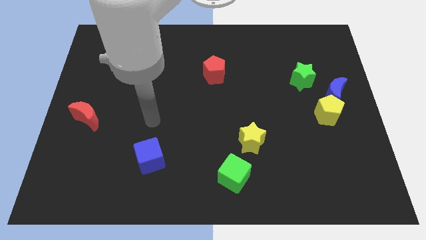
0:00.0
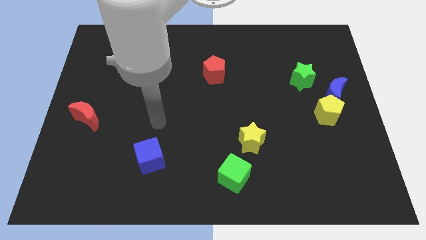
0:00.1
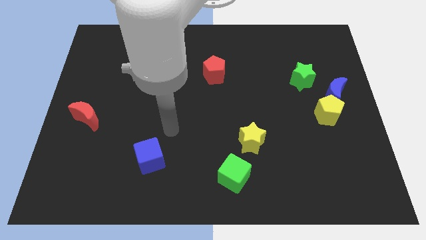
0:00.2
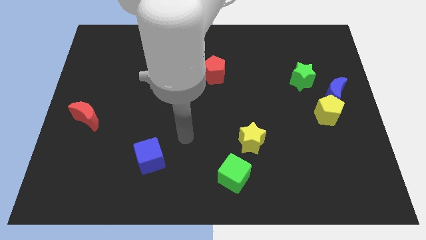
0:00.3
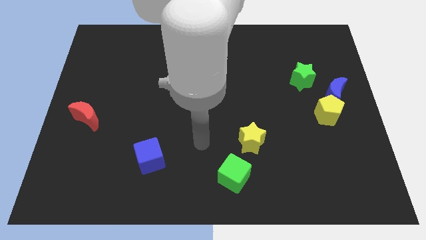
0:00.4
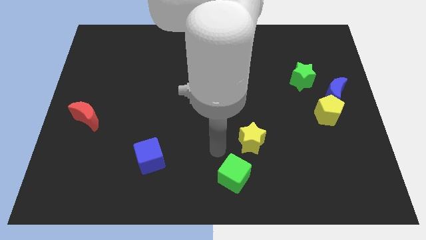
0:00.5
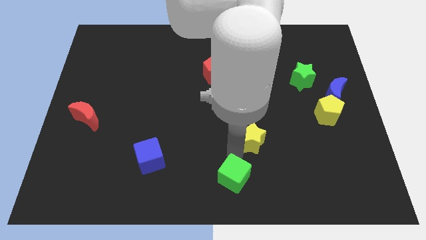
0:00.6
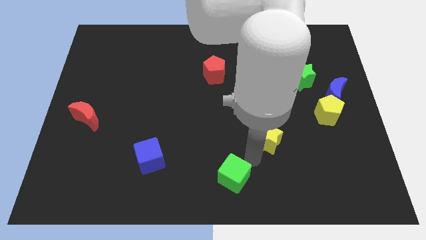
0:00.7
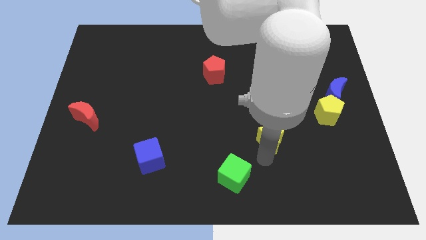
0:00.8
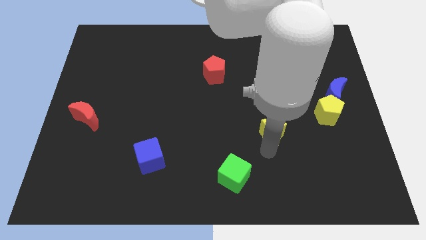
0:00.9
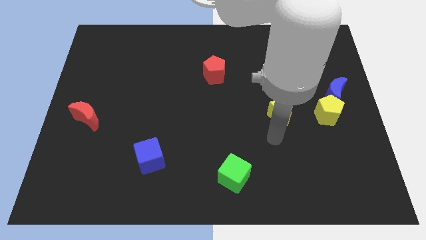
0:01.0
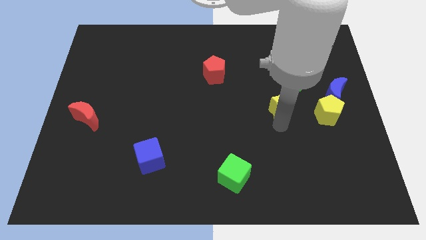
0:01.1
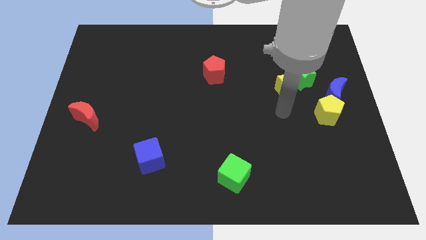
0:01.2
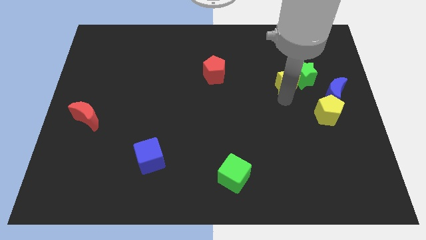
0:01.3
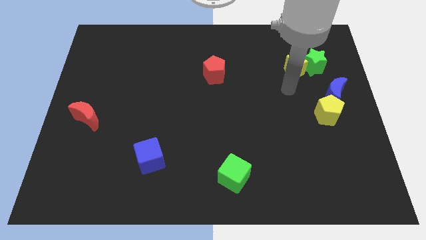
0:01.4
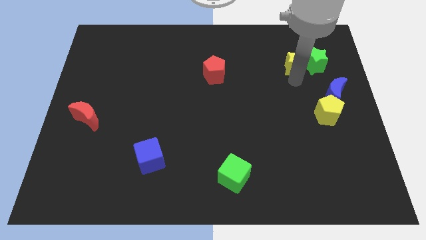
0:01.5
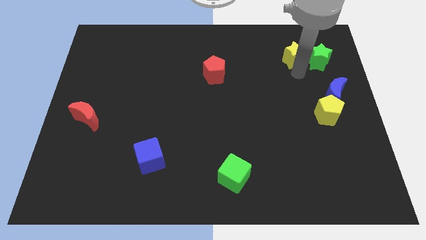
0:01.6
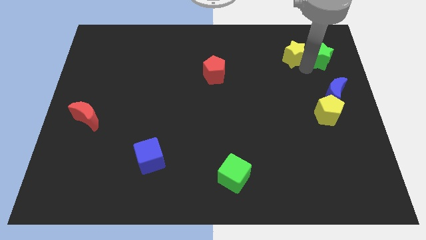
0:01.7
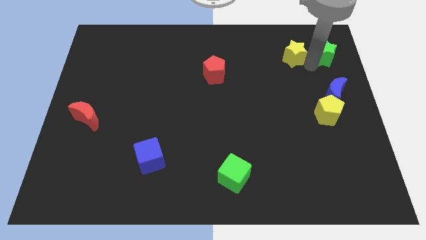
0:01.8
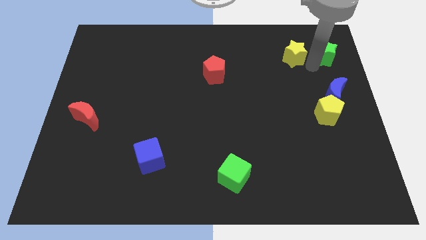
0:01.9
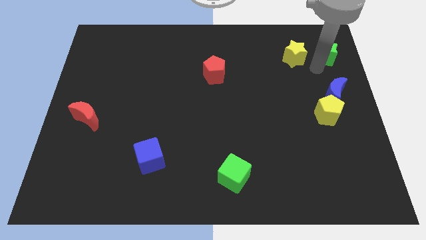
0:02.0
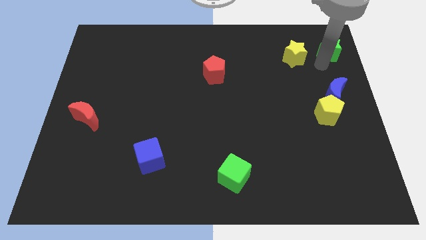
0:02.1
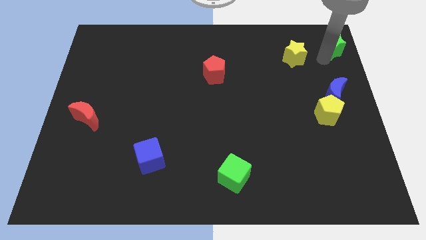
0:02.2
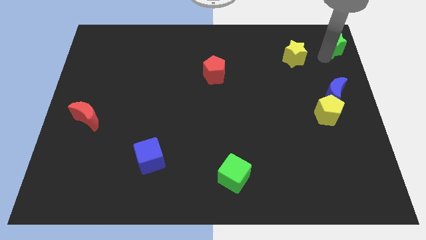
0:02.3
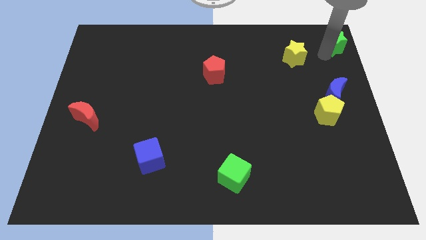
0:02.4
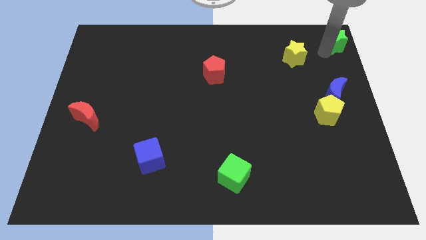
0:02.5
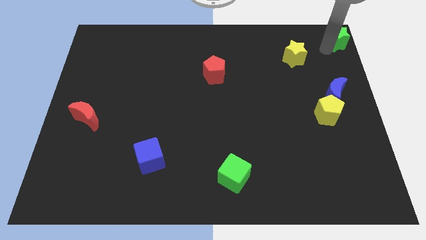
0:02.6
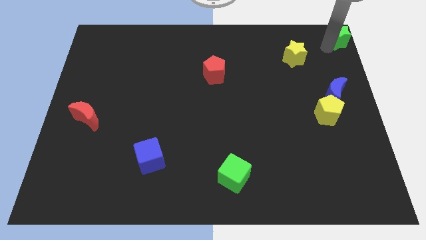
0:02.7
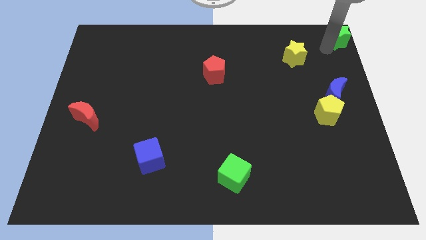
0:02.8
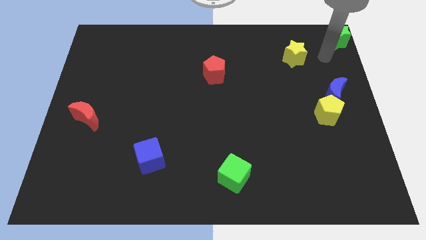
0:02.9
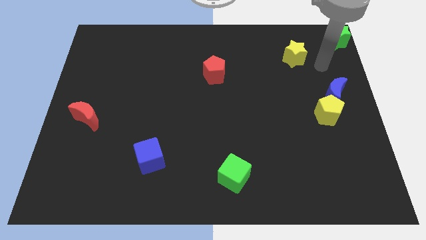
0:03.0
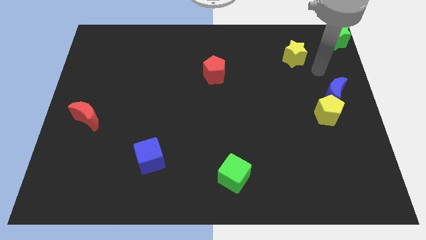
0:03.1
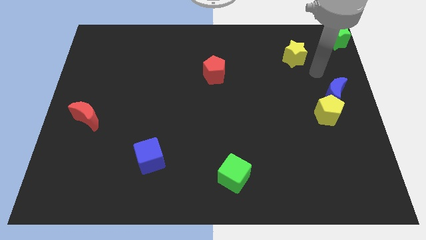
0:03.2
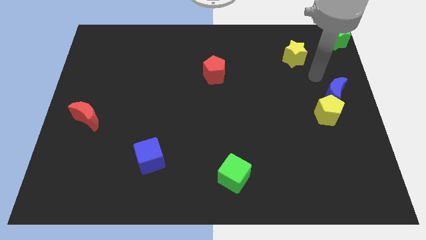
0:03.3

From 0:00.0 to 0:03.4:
push the green star to the top right corner of the board

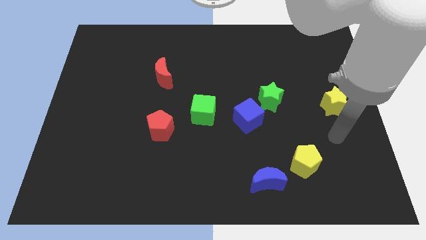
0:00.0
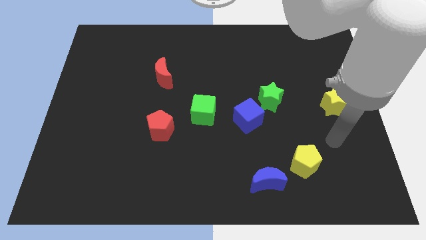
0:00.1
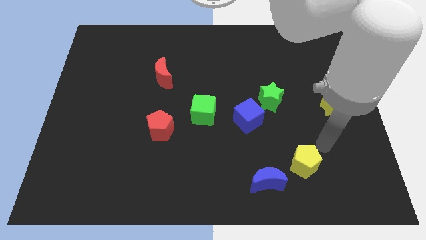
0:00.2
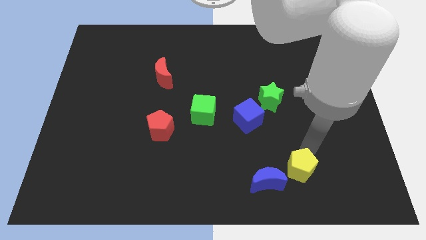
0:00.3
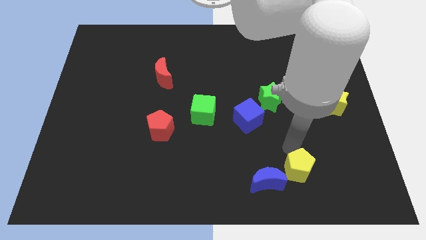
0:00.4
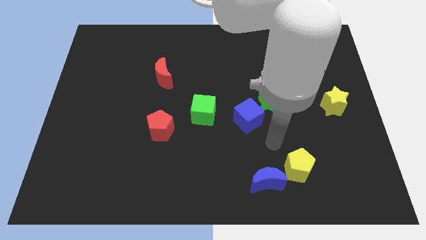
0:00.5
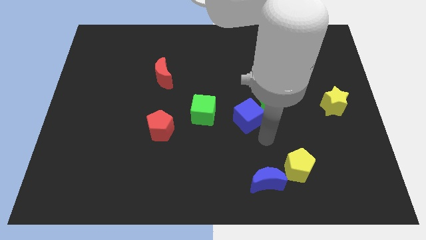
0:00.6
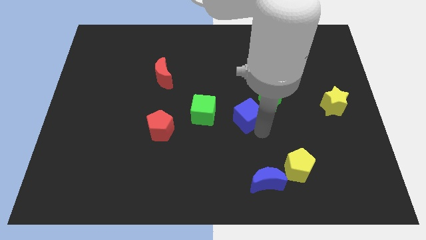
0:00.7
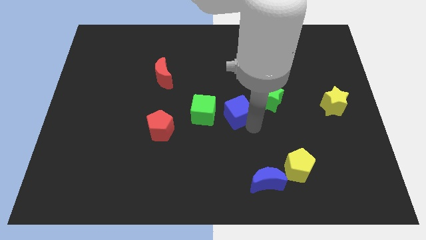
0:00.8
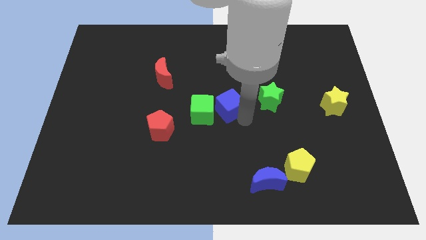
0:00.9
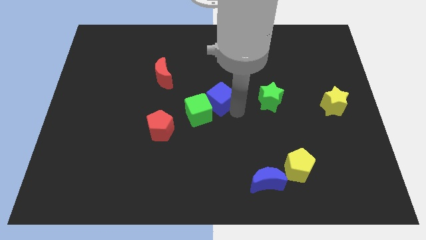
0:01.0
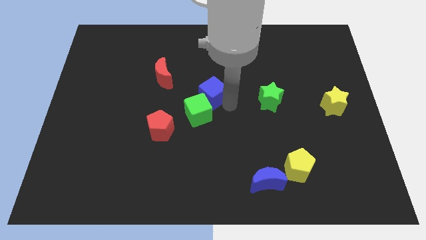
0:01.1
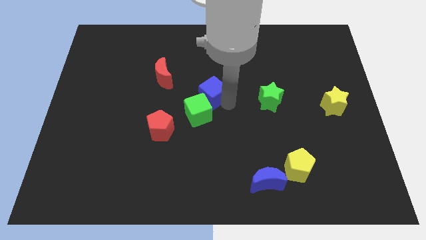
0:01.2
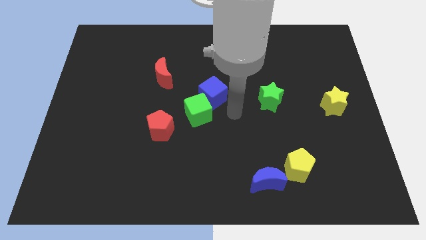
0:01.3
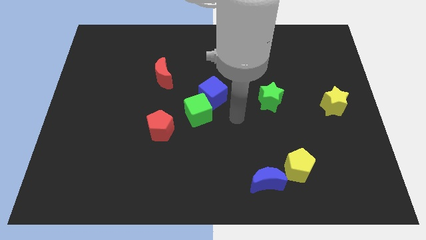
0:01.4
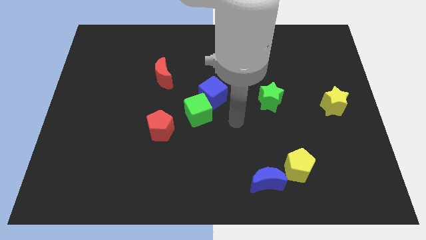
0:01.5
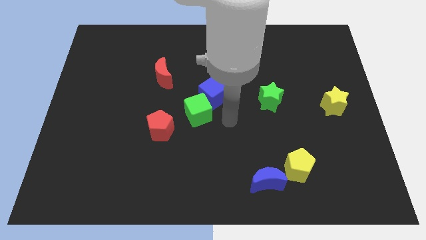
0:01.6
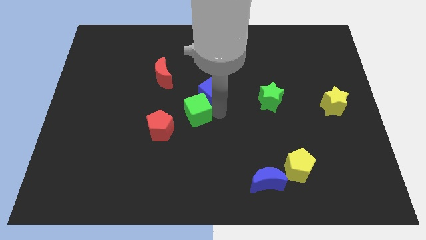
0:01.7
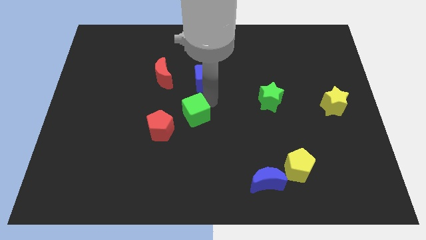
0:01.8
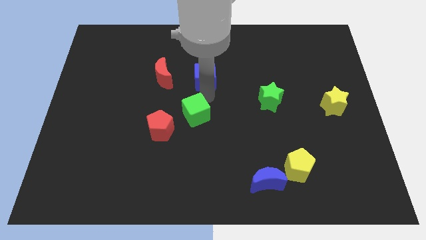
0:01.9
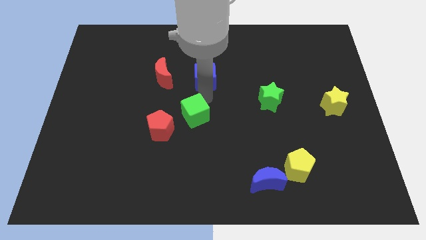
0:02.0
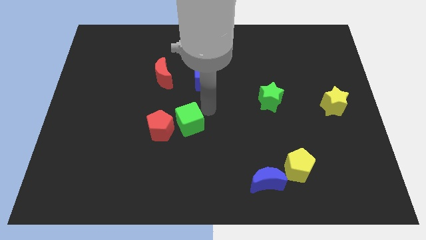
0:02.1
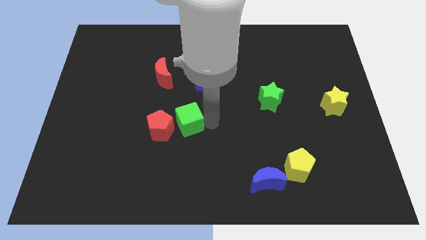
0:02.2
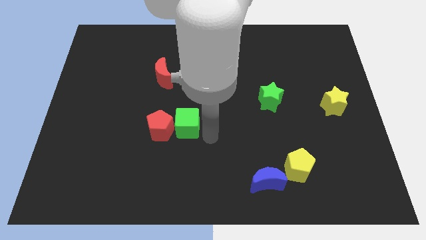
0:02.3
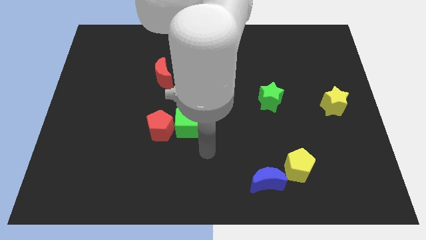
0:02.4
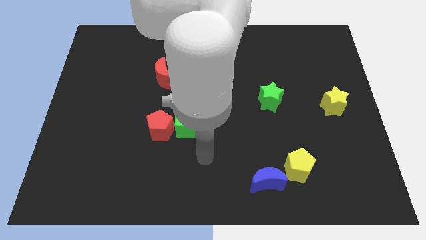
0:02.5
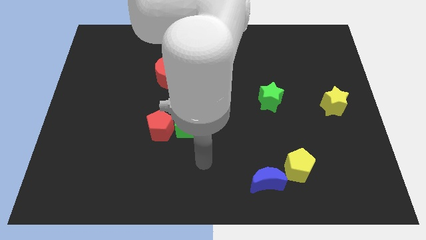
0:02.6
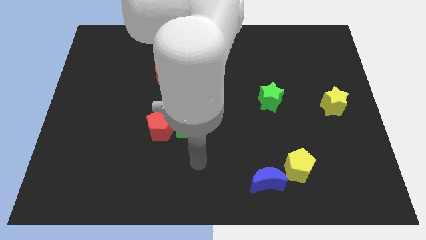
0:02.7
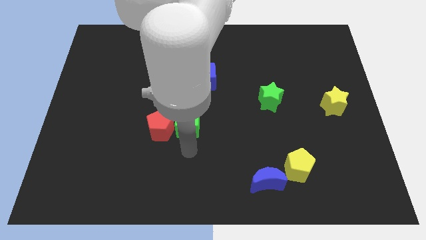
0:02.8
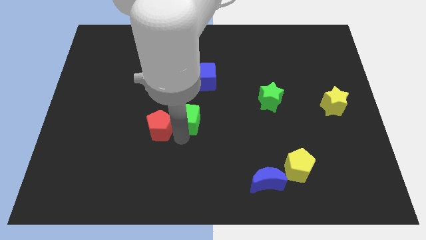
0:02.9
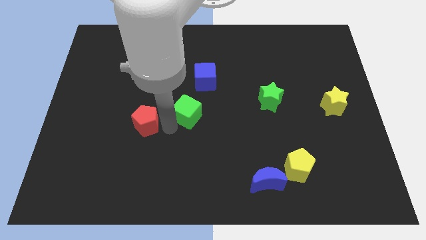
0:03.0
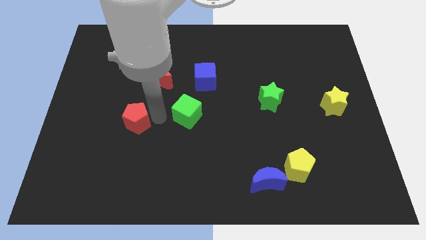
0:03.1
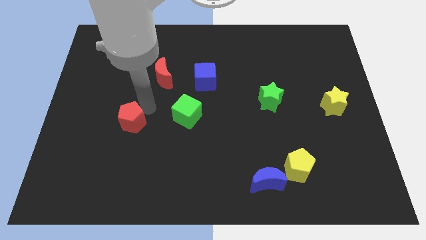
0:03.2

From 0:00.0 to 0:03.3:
separate the blue cube from the green star

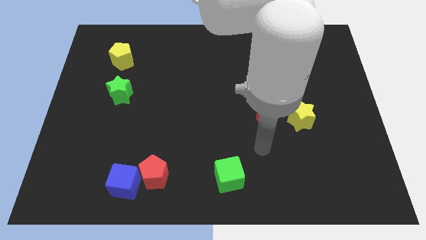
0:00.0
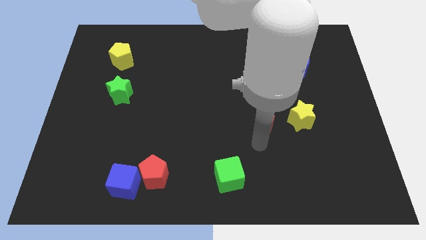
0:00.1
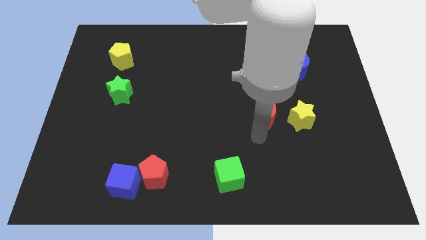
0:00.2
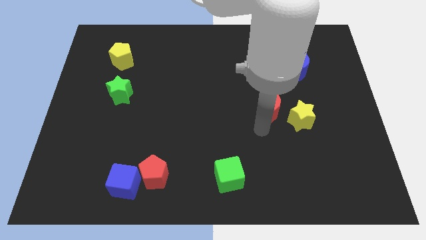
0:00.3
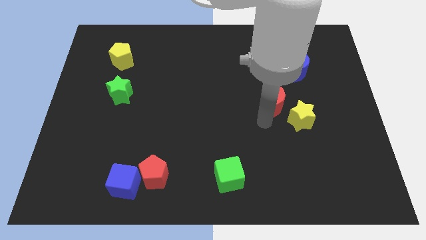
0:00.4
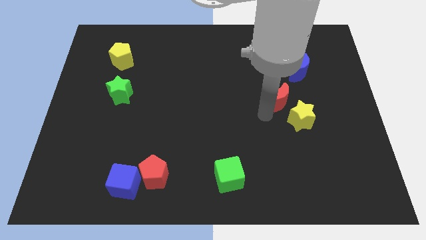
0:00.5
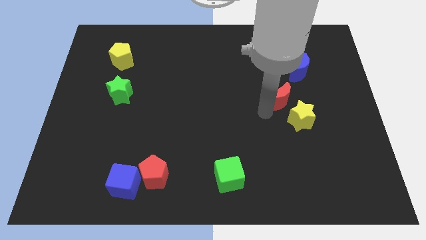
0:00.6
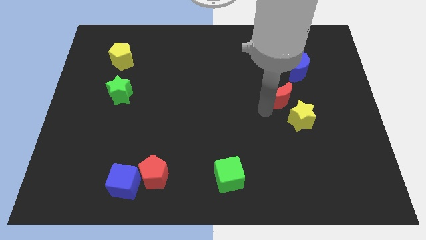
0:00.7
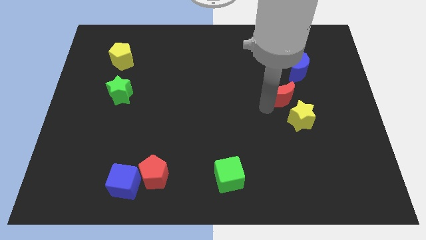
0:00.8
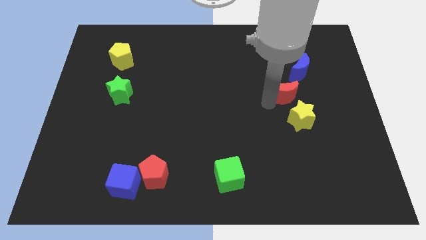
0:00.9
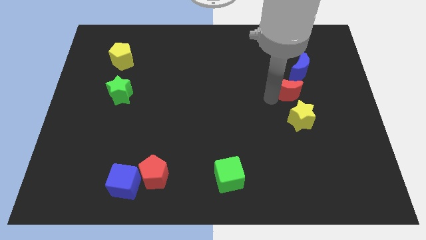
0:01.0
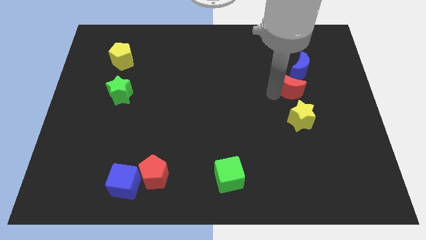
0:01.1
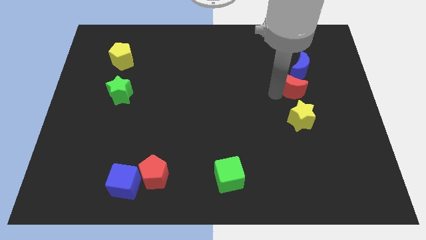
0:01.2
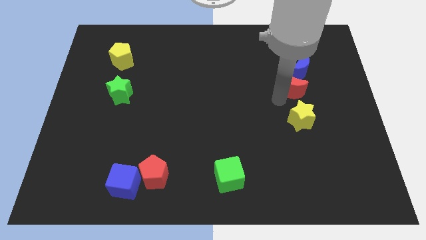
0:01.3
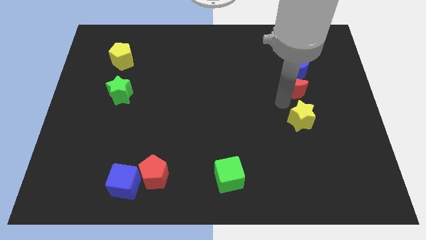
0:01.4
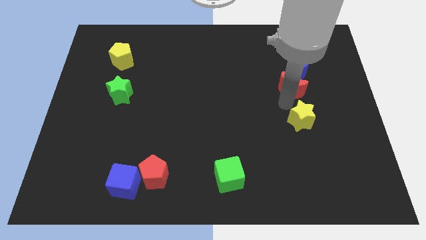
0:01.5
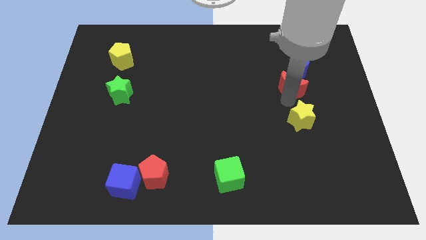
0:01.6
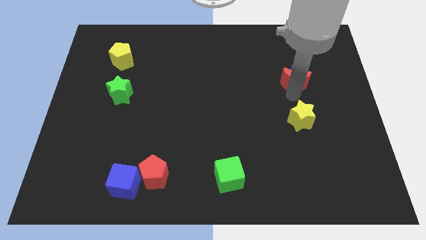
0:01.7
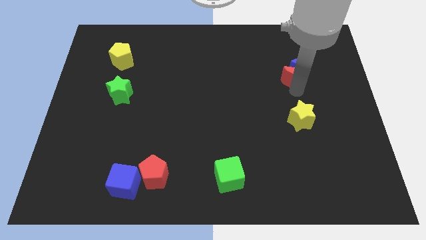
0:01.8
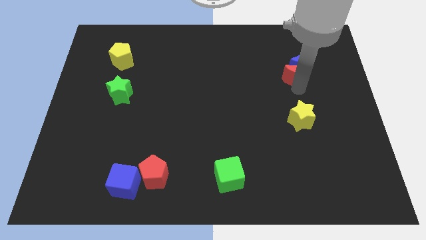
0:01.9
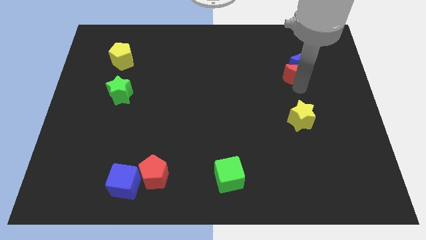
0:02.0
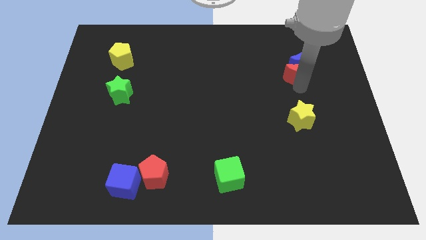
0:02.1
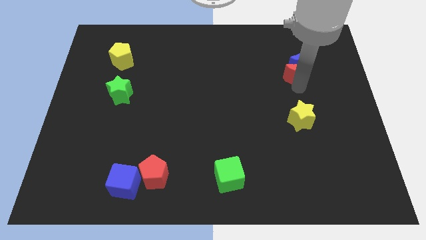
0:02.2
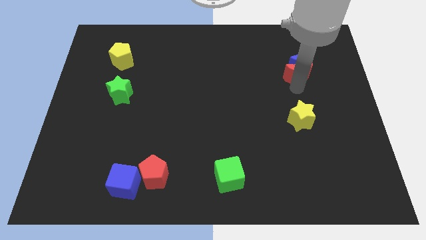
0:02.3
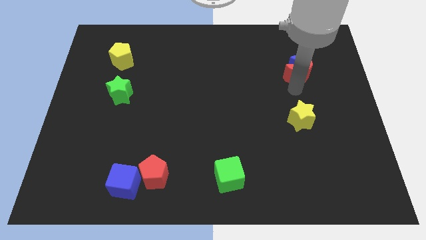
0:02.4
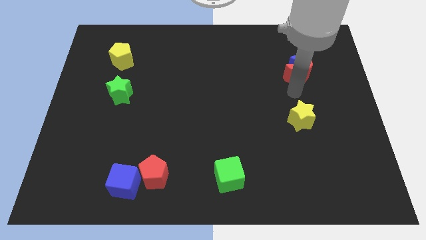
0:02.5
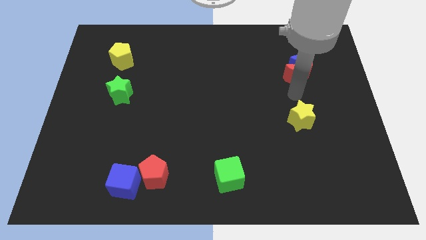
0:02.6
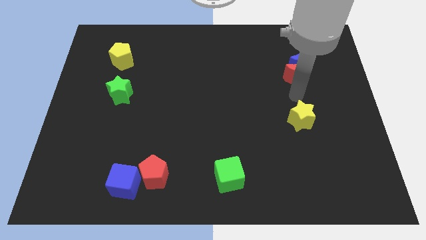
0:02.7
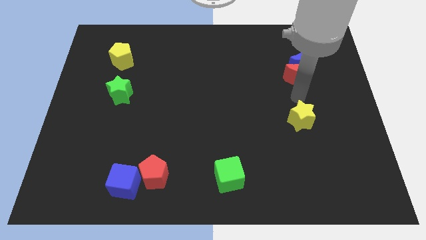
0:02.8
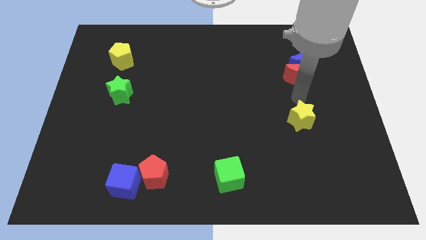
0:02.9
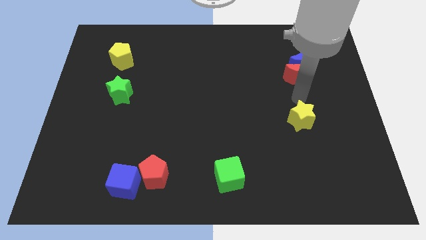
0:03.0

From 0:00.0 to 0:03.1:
push the red moon into the blue moon
